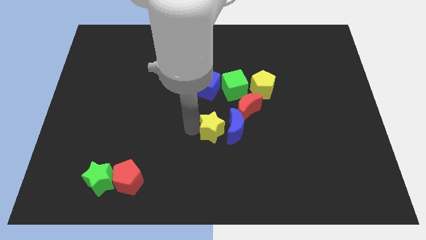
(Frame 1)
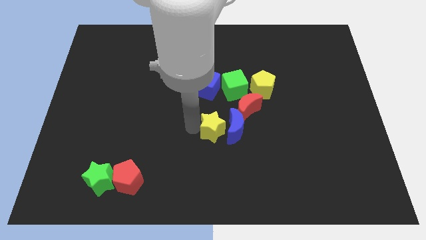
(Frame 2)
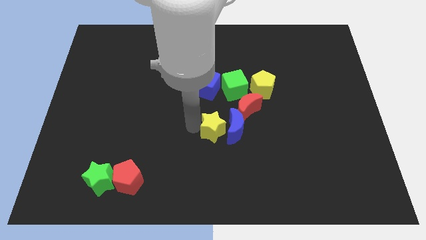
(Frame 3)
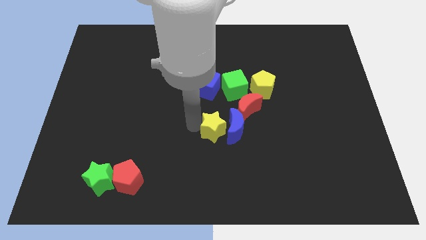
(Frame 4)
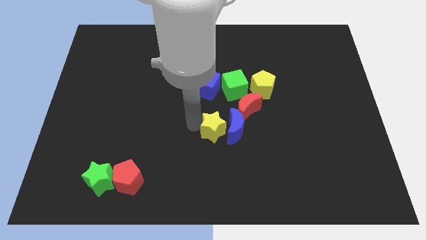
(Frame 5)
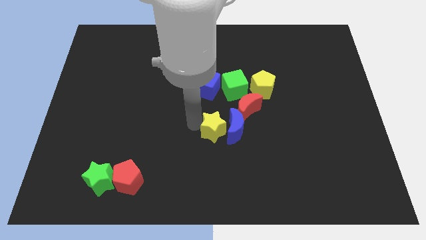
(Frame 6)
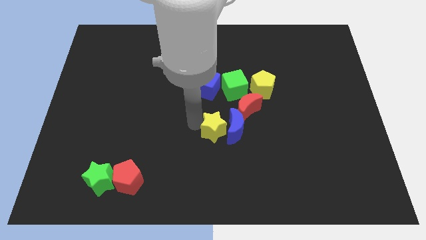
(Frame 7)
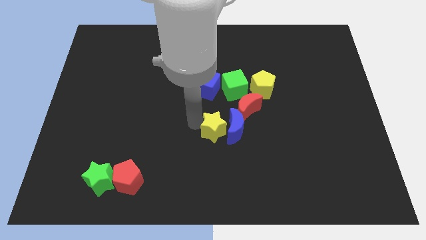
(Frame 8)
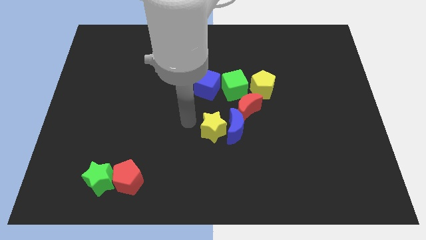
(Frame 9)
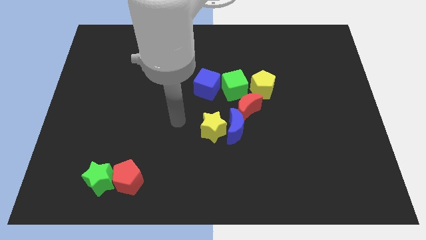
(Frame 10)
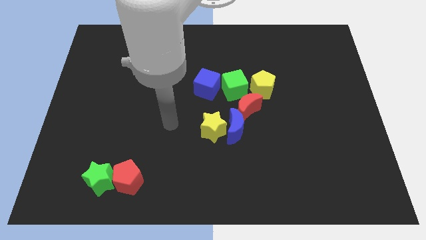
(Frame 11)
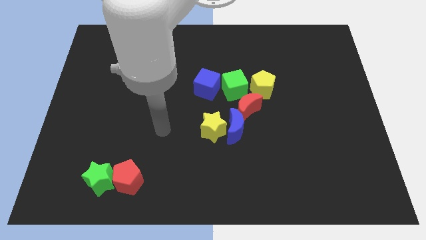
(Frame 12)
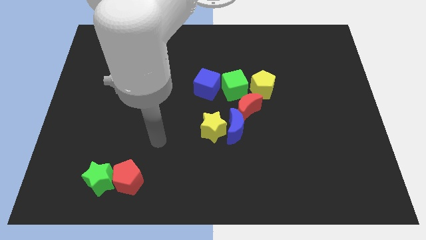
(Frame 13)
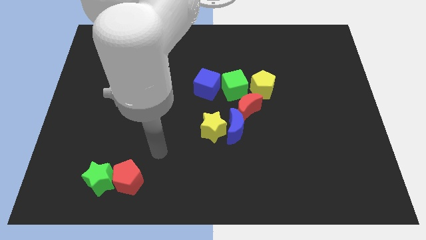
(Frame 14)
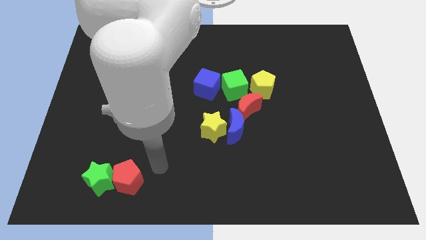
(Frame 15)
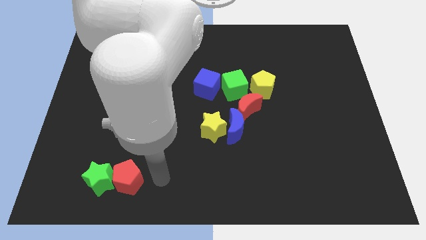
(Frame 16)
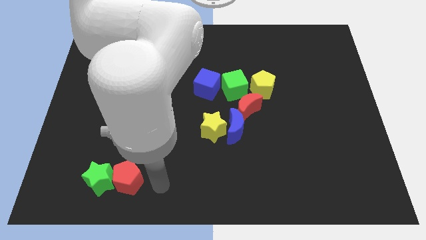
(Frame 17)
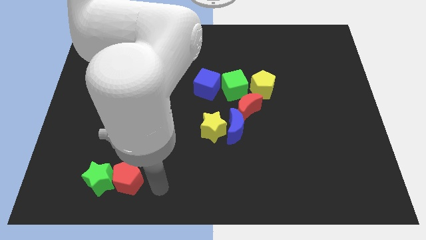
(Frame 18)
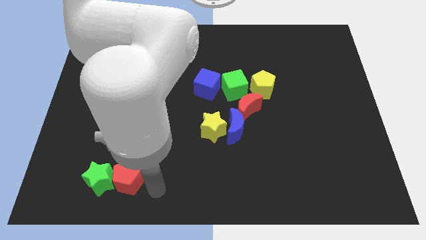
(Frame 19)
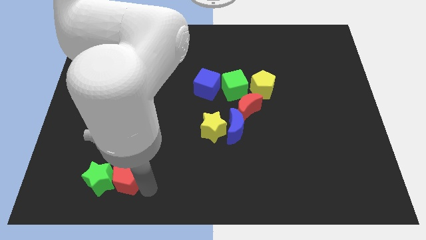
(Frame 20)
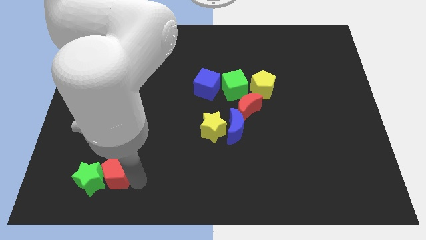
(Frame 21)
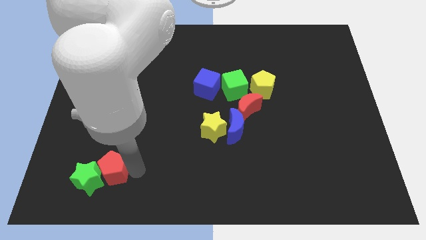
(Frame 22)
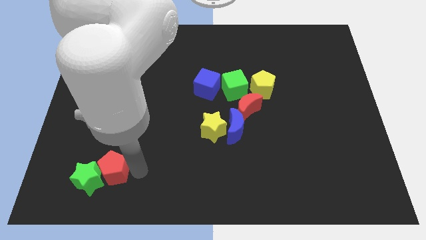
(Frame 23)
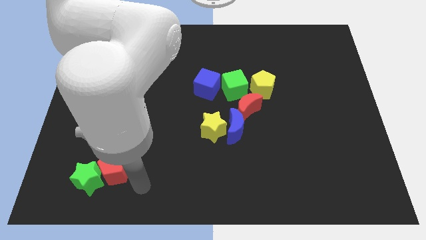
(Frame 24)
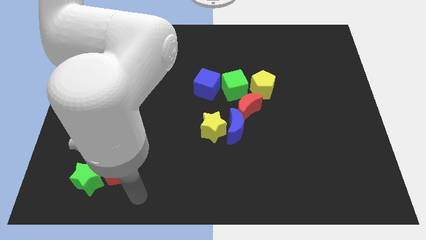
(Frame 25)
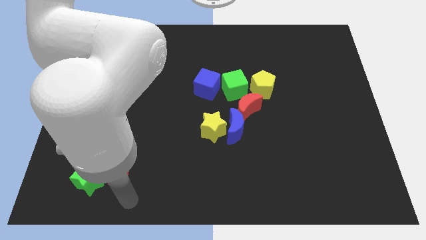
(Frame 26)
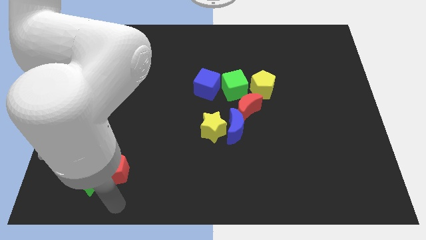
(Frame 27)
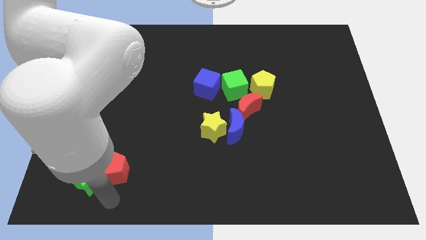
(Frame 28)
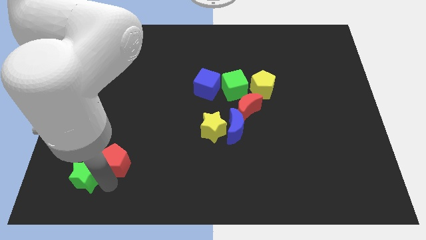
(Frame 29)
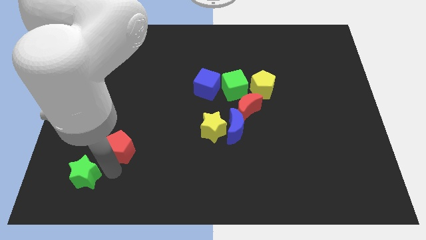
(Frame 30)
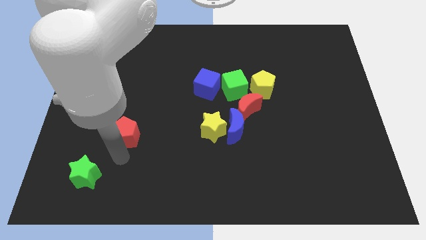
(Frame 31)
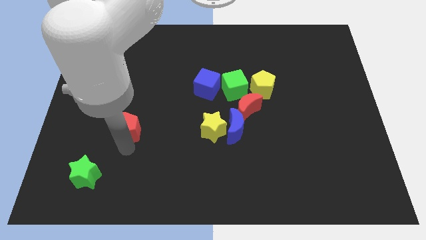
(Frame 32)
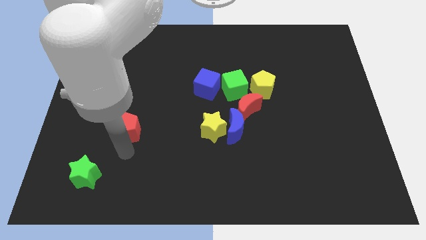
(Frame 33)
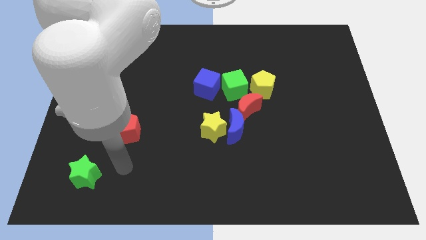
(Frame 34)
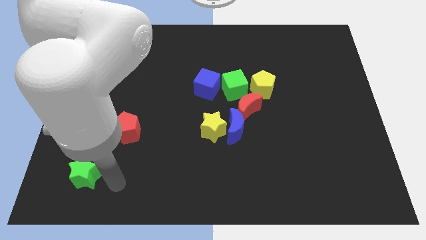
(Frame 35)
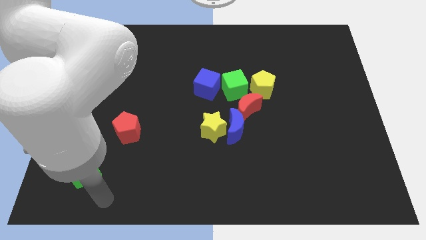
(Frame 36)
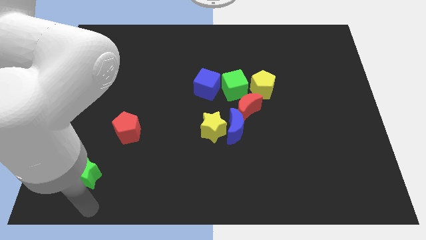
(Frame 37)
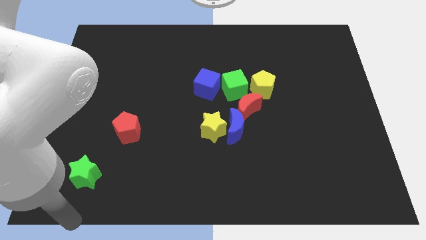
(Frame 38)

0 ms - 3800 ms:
separate the green star and the red pentagon

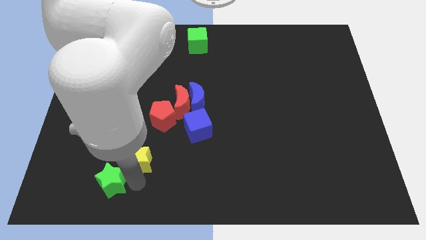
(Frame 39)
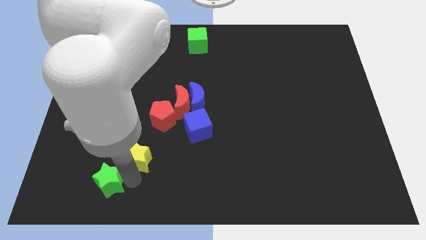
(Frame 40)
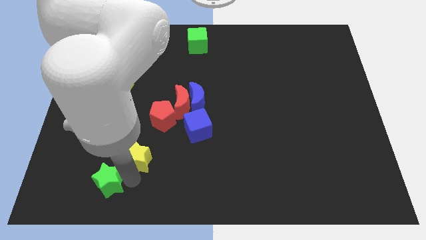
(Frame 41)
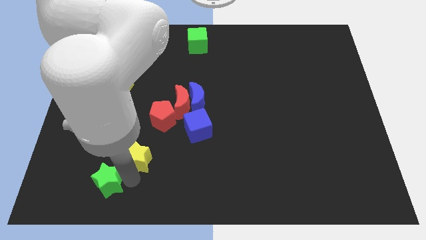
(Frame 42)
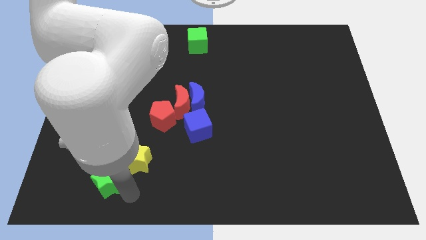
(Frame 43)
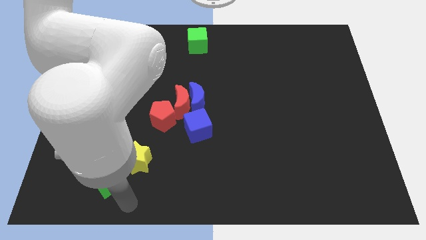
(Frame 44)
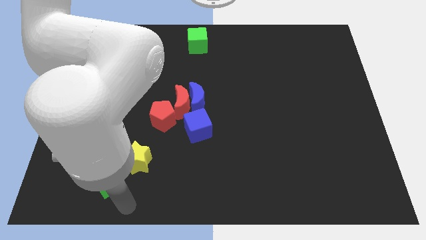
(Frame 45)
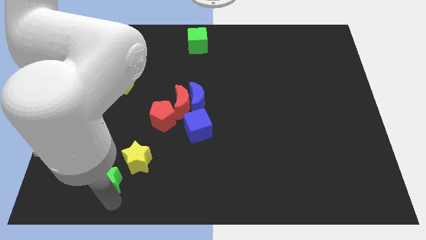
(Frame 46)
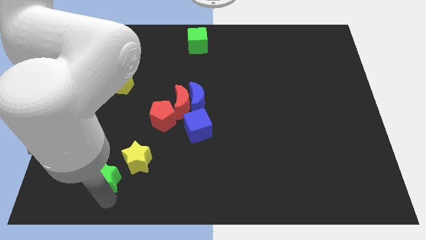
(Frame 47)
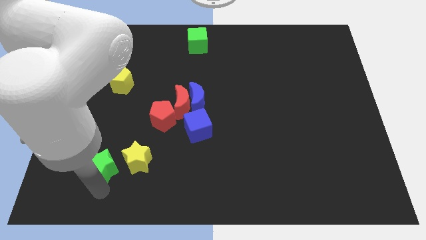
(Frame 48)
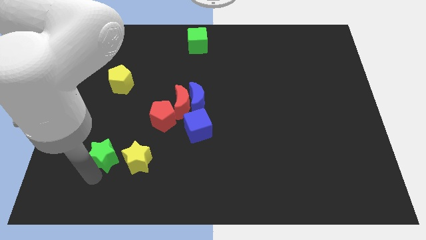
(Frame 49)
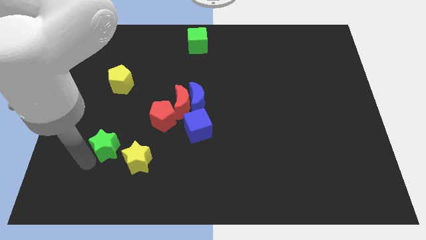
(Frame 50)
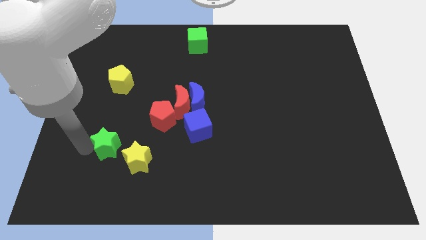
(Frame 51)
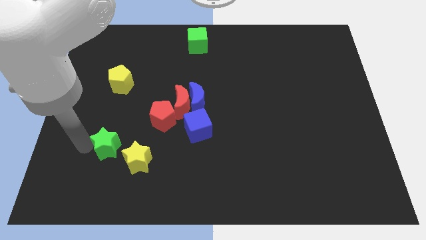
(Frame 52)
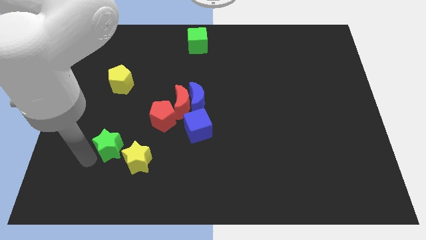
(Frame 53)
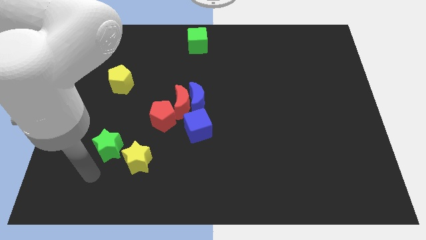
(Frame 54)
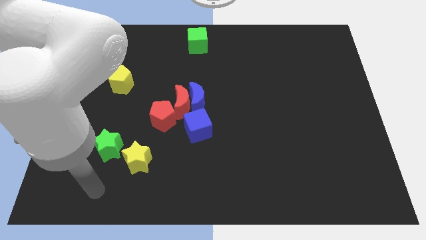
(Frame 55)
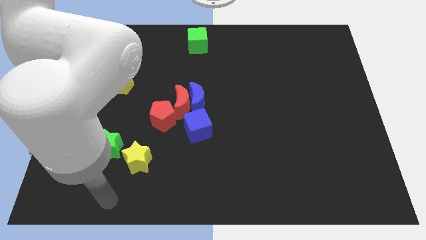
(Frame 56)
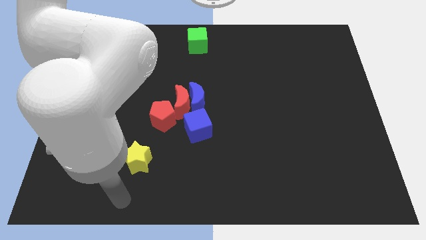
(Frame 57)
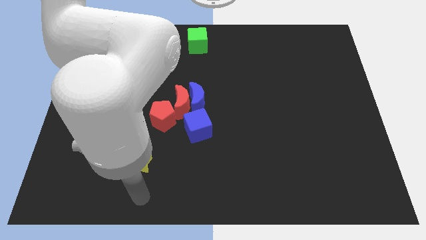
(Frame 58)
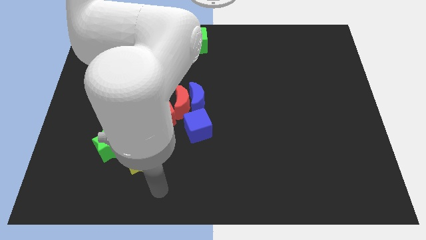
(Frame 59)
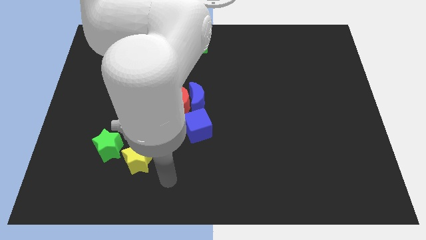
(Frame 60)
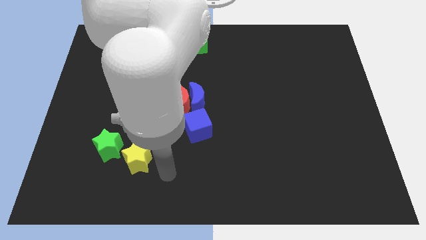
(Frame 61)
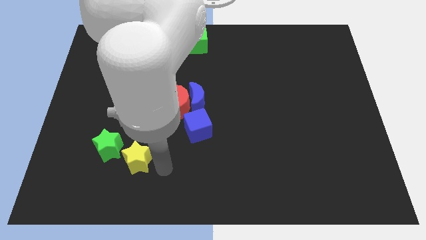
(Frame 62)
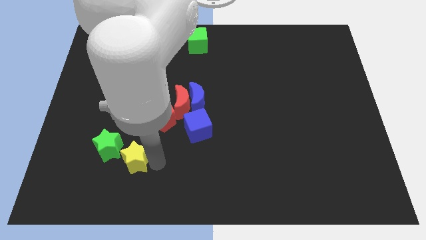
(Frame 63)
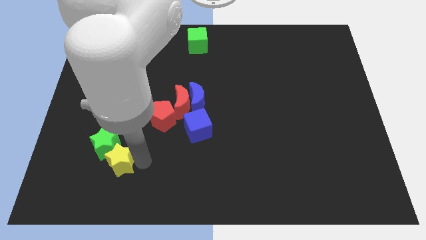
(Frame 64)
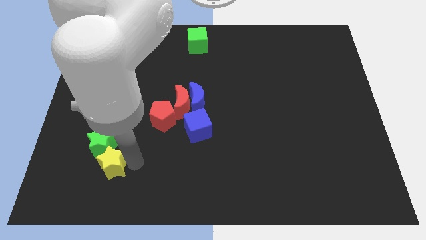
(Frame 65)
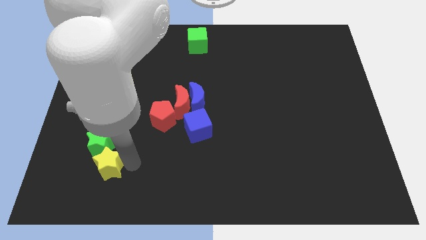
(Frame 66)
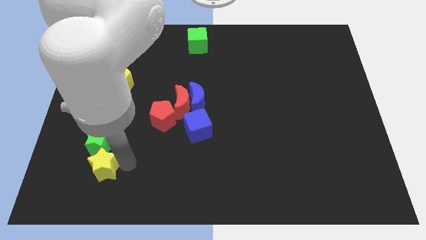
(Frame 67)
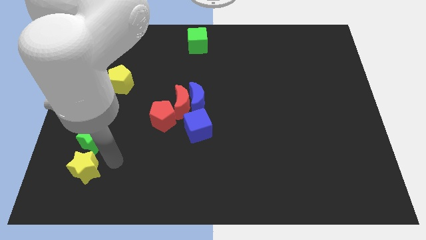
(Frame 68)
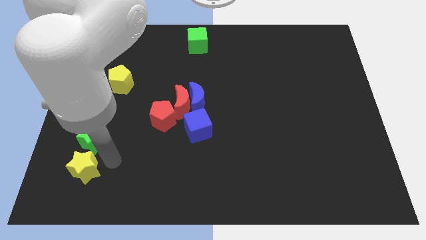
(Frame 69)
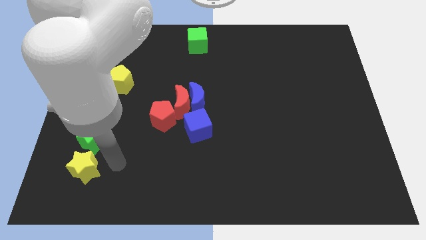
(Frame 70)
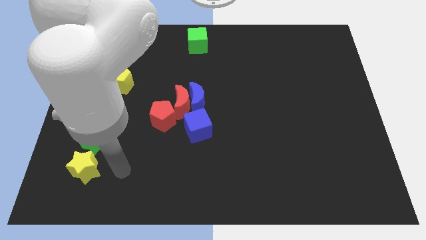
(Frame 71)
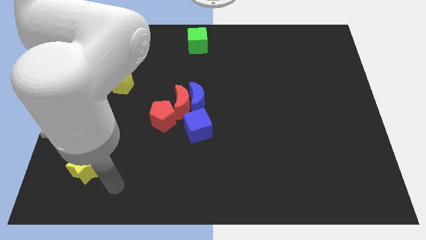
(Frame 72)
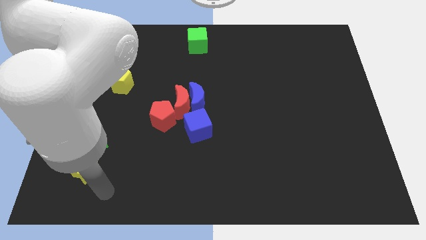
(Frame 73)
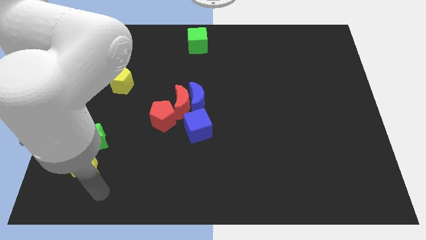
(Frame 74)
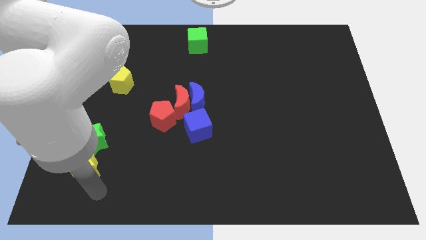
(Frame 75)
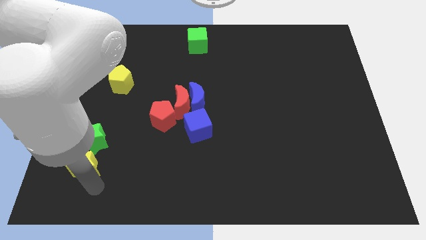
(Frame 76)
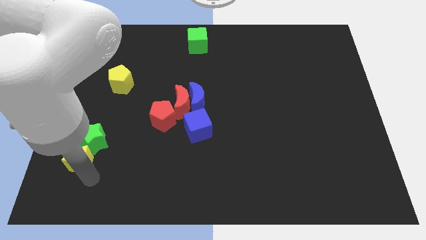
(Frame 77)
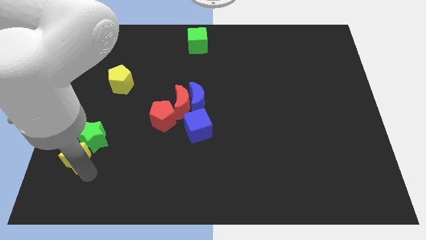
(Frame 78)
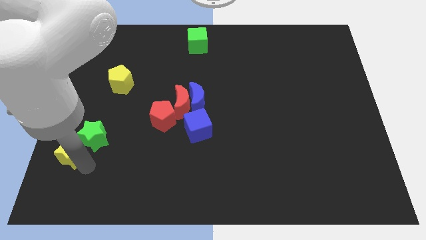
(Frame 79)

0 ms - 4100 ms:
push the stars to the top left of the board

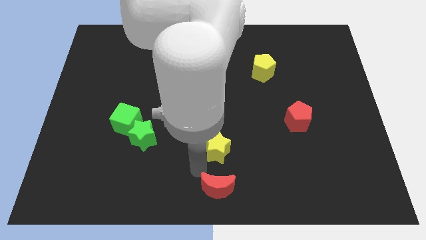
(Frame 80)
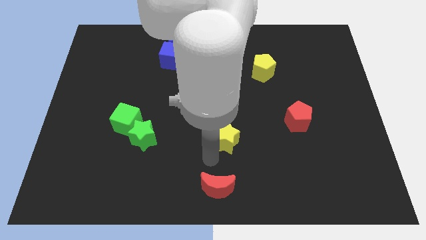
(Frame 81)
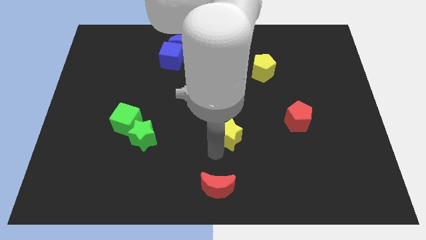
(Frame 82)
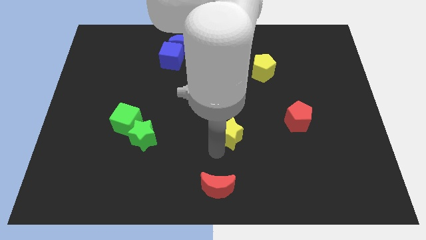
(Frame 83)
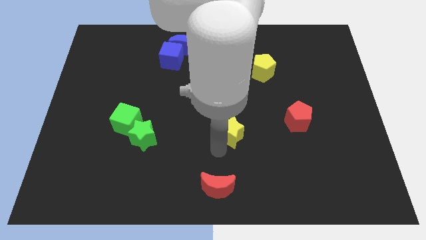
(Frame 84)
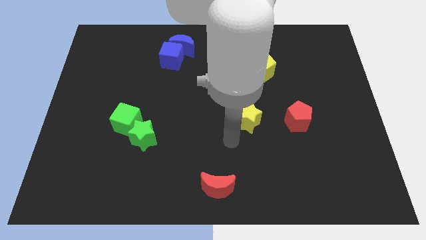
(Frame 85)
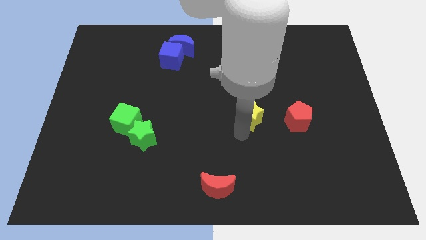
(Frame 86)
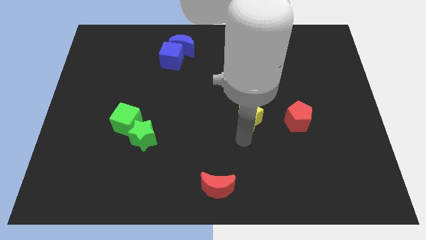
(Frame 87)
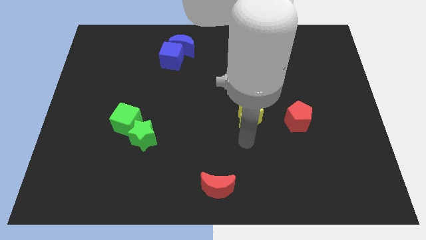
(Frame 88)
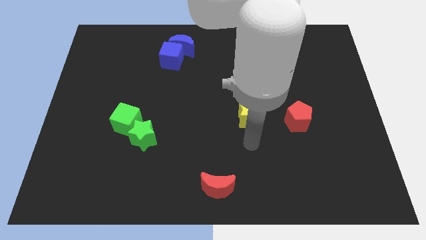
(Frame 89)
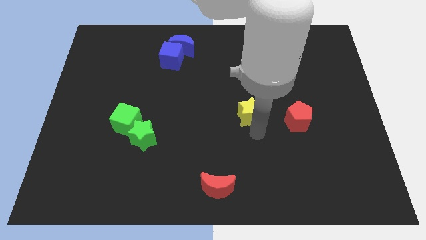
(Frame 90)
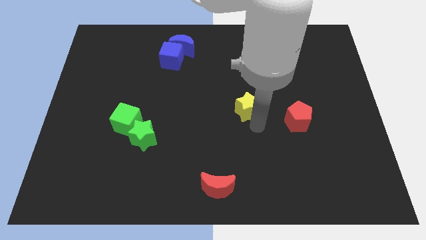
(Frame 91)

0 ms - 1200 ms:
move the yellow star parallel to the red pentagon
